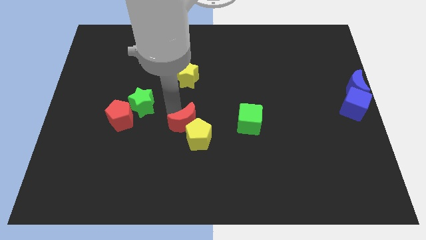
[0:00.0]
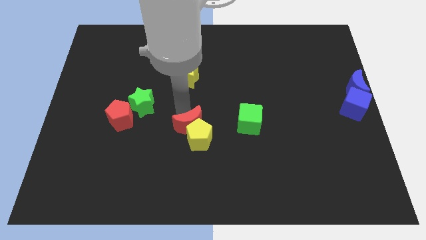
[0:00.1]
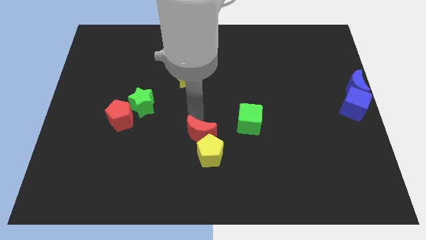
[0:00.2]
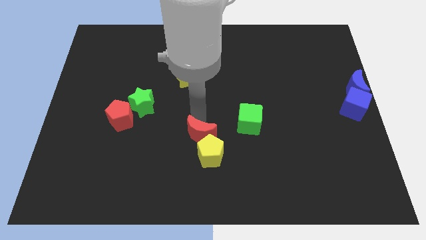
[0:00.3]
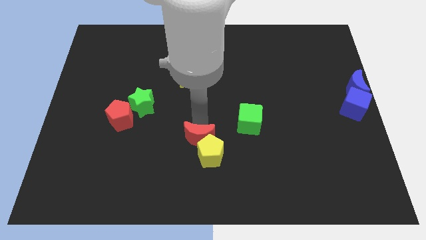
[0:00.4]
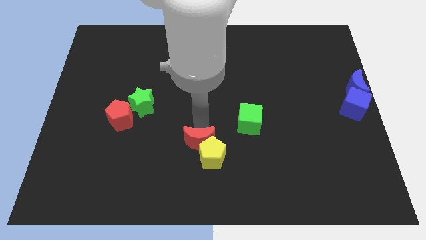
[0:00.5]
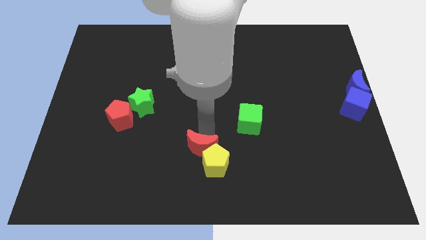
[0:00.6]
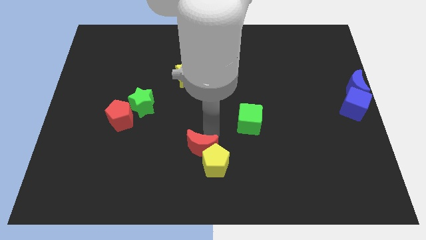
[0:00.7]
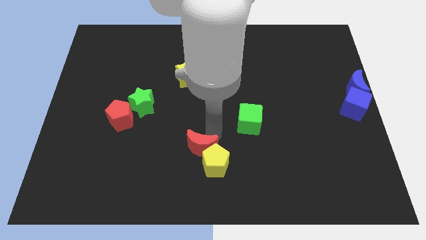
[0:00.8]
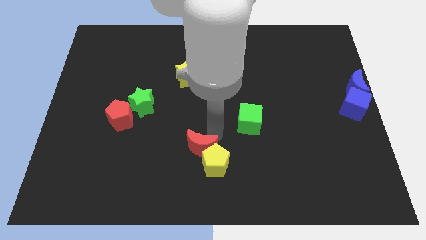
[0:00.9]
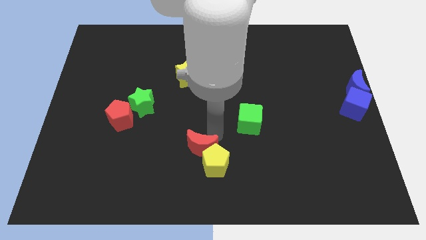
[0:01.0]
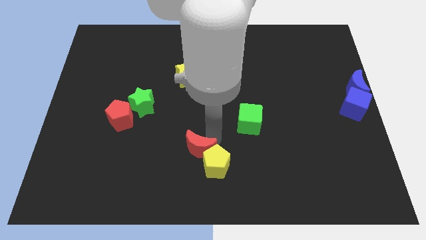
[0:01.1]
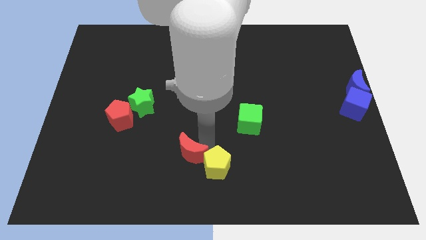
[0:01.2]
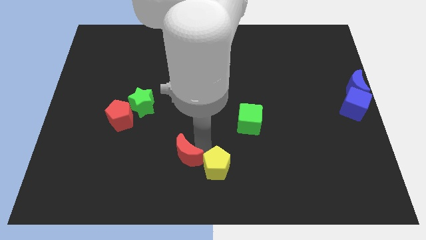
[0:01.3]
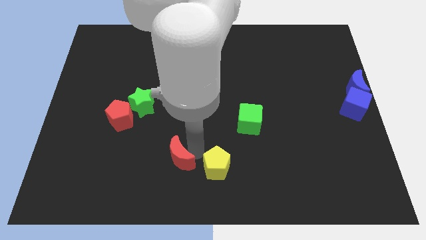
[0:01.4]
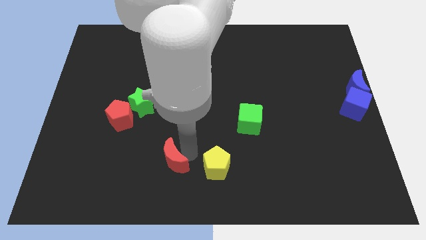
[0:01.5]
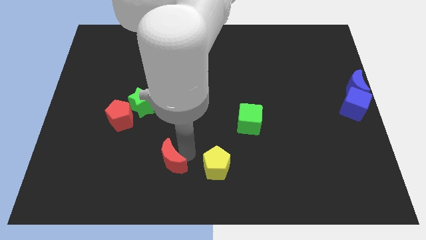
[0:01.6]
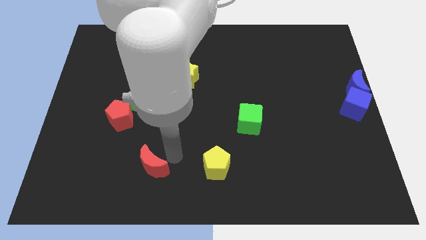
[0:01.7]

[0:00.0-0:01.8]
place the red crescent horizontally to the left side of the yellow pentagon

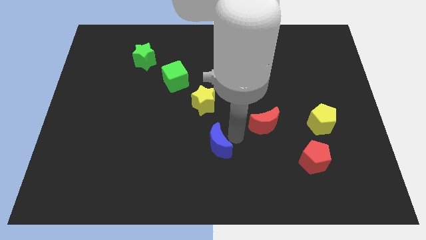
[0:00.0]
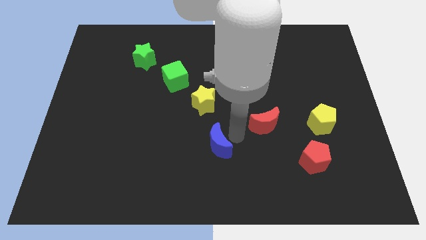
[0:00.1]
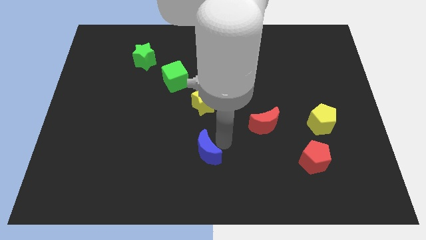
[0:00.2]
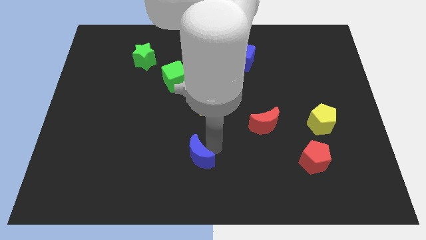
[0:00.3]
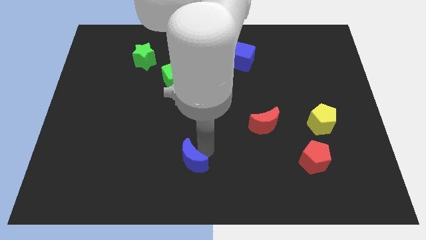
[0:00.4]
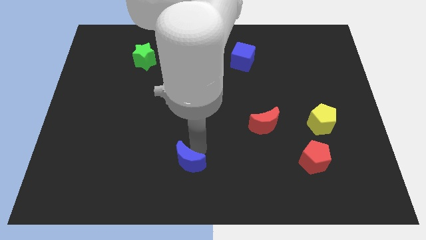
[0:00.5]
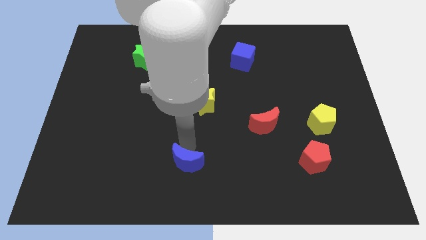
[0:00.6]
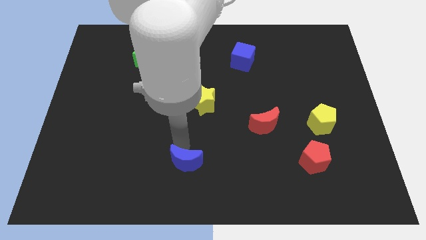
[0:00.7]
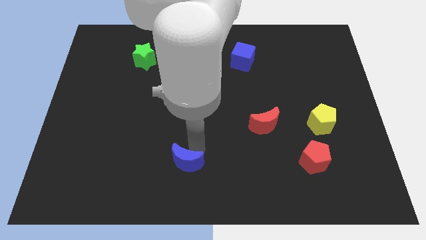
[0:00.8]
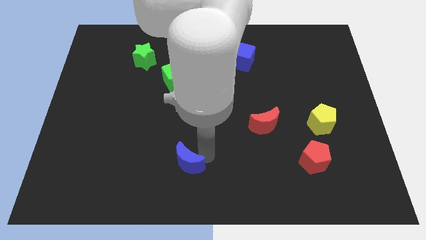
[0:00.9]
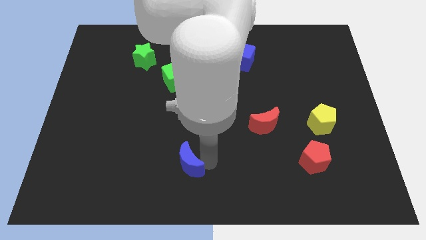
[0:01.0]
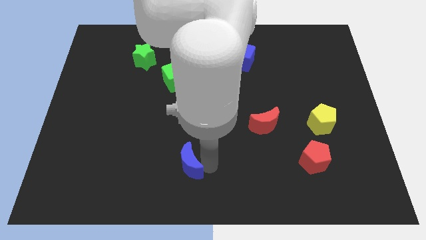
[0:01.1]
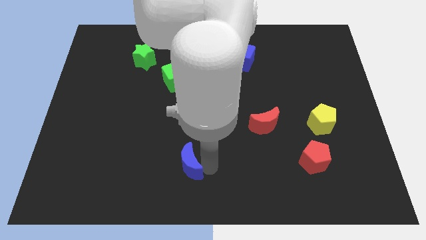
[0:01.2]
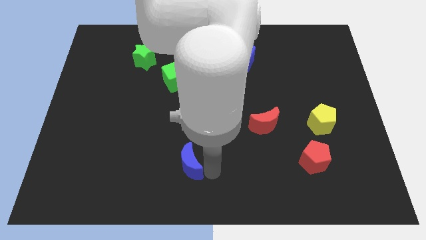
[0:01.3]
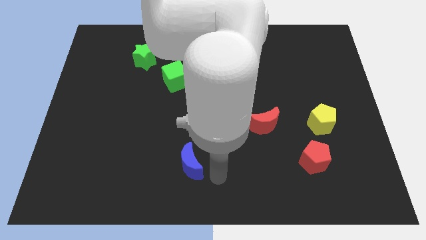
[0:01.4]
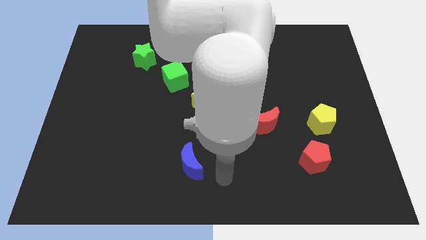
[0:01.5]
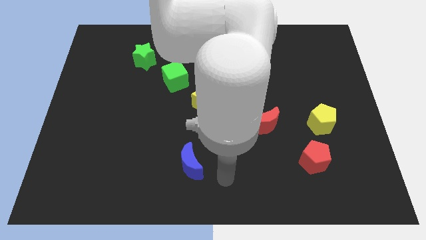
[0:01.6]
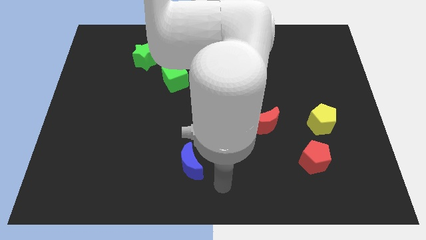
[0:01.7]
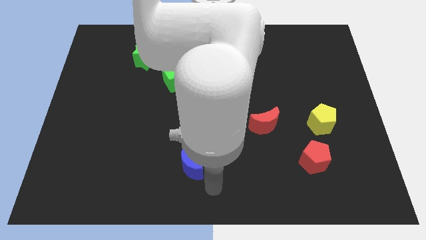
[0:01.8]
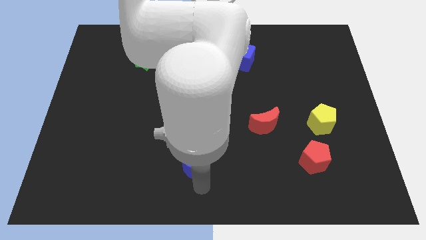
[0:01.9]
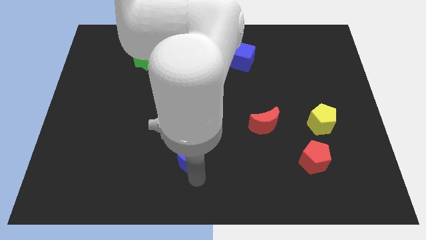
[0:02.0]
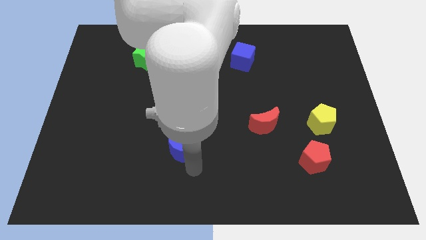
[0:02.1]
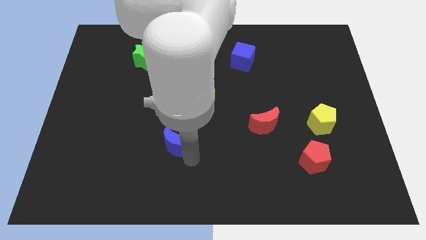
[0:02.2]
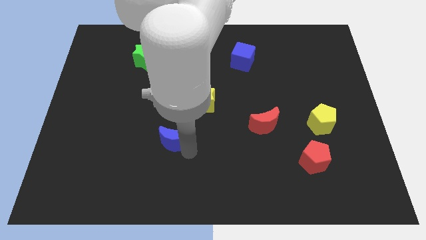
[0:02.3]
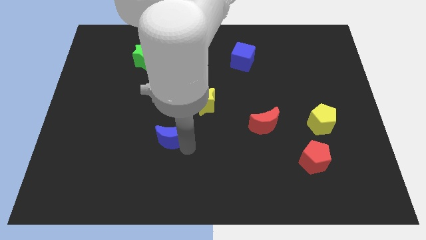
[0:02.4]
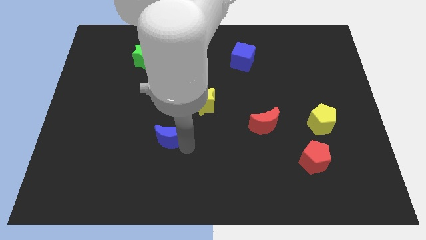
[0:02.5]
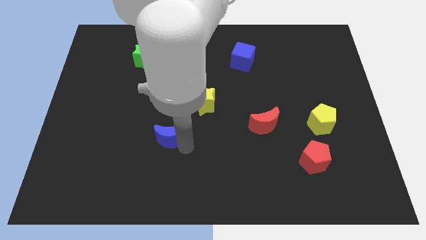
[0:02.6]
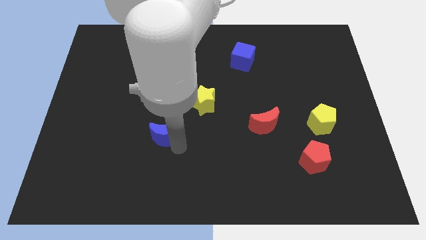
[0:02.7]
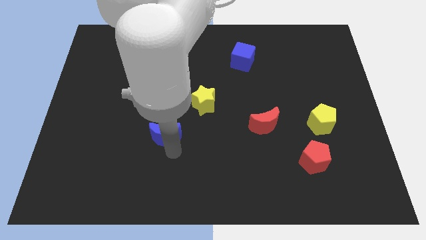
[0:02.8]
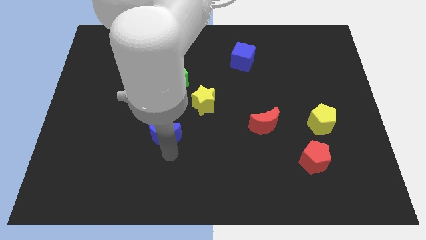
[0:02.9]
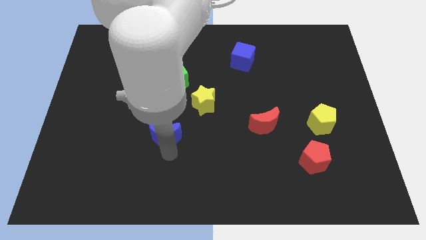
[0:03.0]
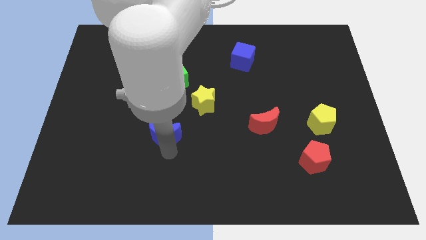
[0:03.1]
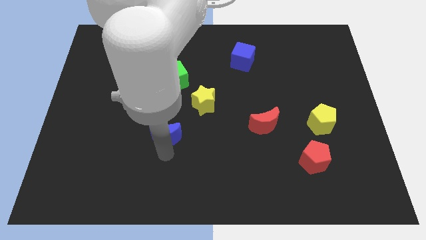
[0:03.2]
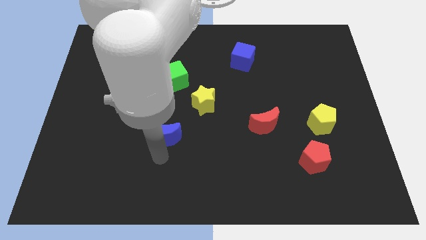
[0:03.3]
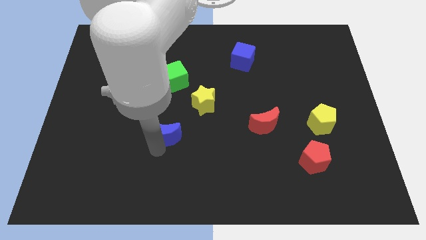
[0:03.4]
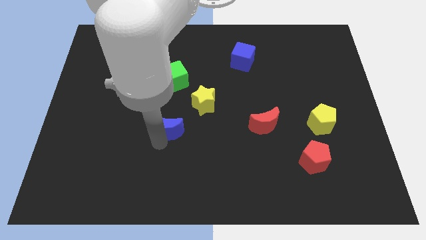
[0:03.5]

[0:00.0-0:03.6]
push the blue crescent to the bottom left of the yellow star

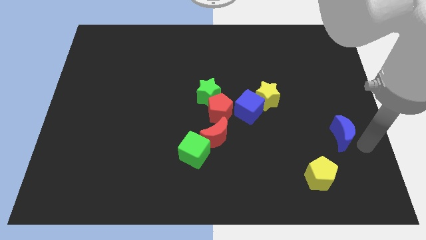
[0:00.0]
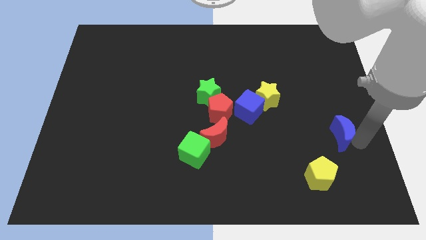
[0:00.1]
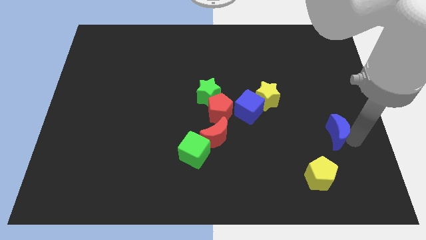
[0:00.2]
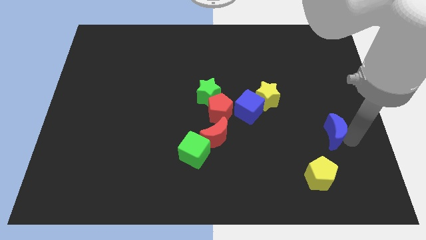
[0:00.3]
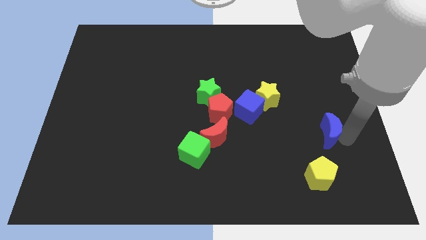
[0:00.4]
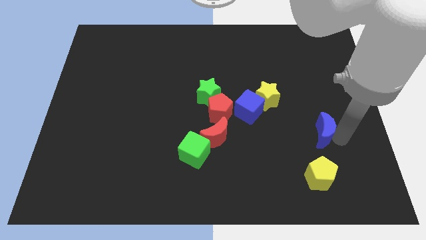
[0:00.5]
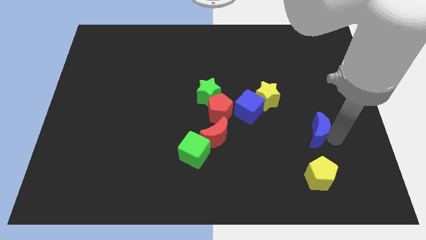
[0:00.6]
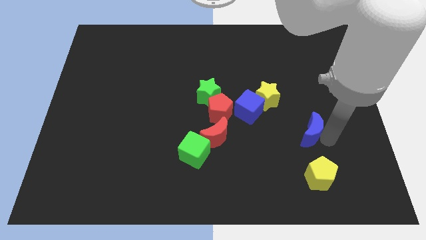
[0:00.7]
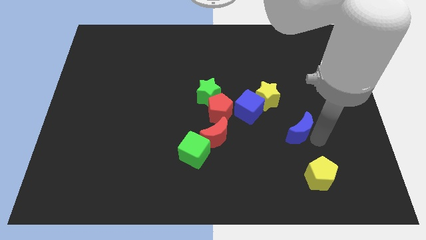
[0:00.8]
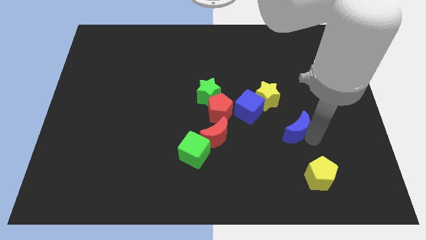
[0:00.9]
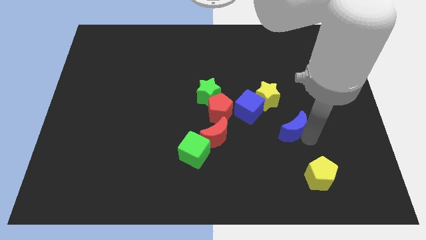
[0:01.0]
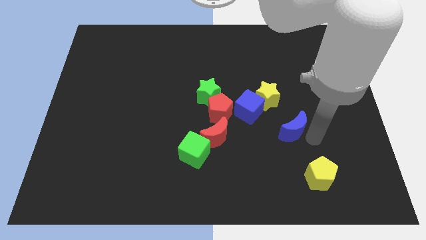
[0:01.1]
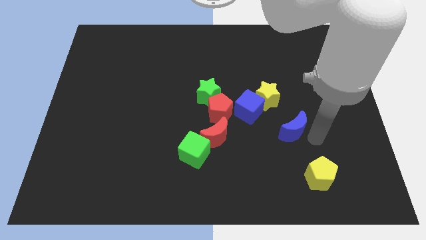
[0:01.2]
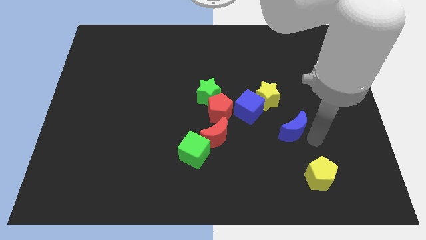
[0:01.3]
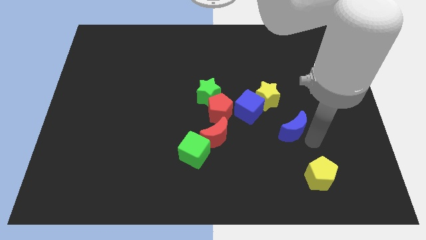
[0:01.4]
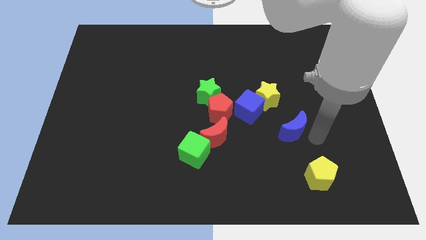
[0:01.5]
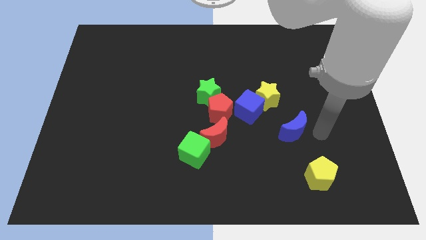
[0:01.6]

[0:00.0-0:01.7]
move the blue moon slightly to the left

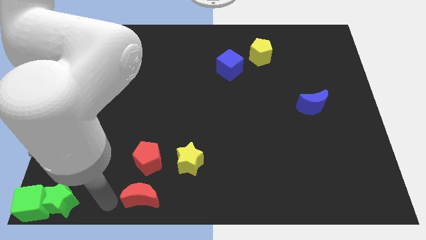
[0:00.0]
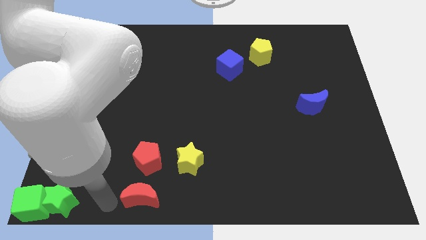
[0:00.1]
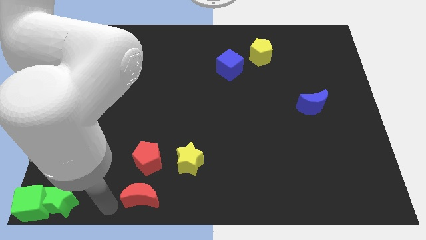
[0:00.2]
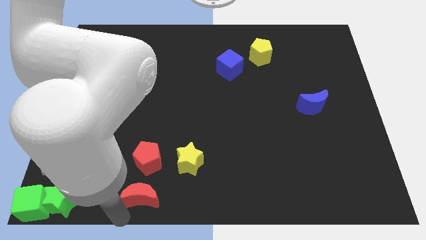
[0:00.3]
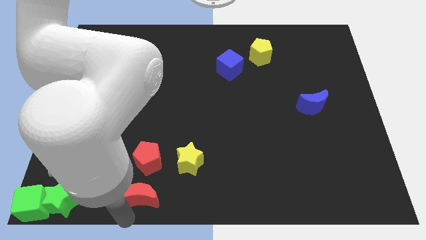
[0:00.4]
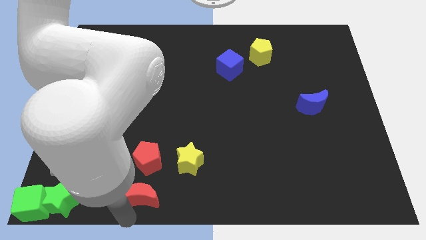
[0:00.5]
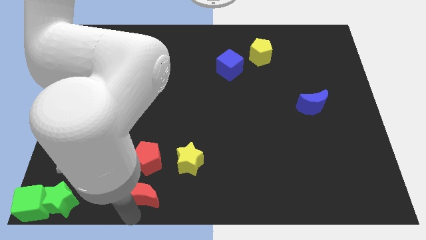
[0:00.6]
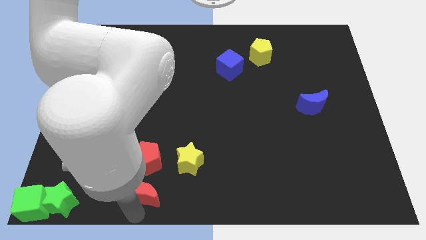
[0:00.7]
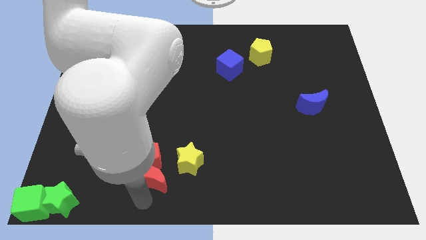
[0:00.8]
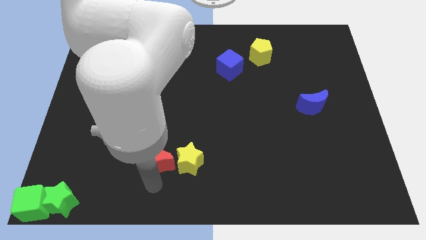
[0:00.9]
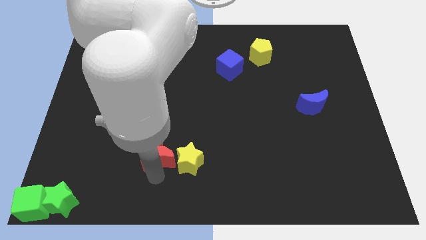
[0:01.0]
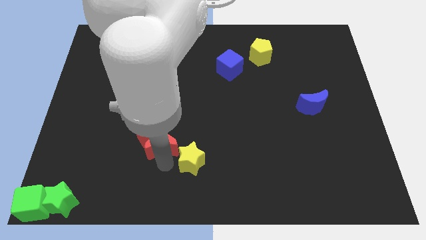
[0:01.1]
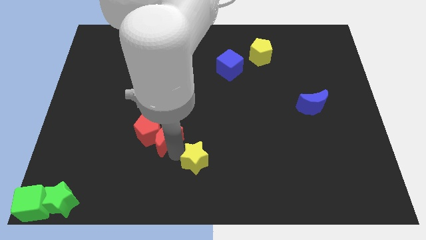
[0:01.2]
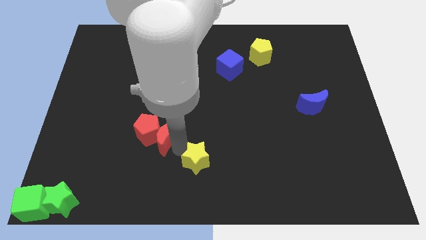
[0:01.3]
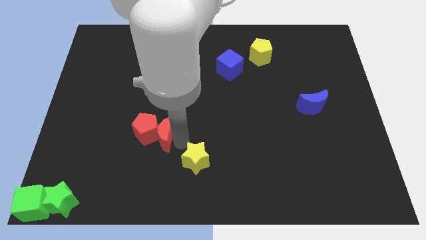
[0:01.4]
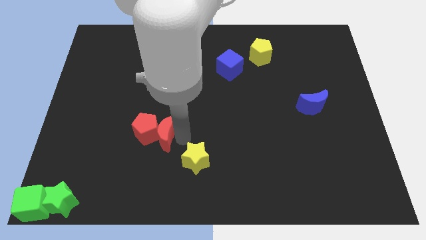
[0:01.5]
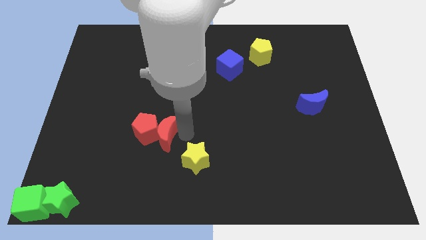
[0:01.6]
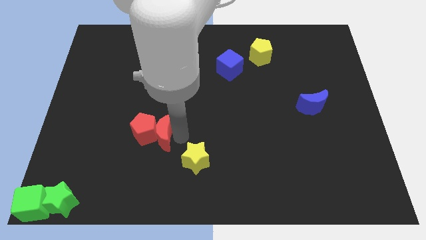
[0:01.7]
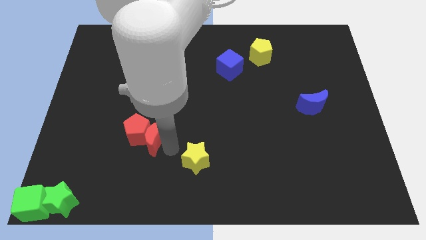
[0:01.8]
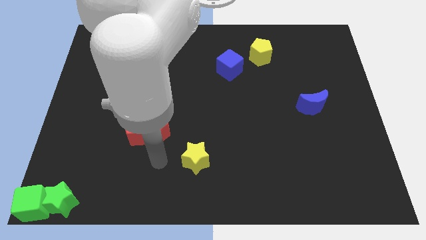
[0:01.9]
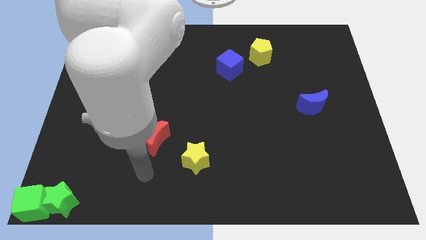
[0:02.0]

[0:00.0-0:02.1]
place the red blocks to the top left of yellow star
